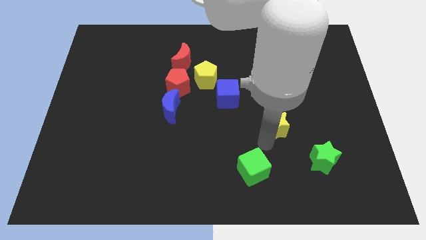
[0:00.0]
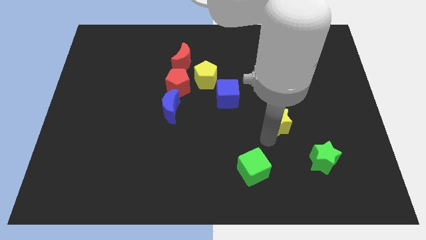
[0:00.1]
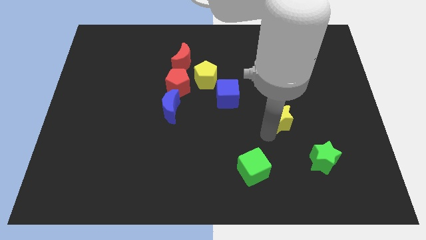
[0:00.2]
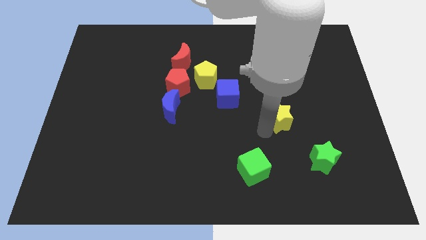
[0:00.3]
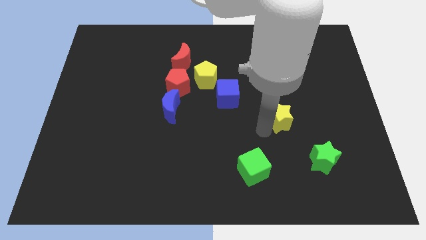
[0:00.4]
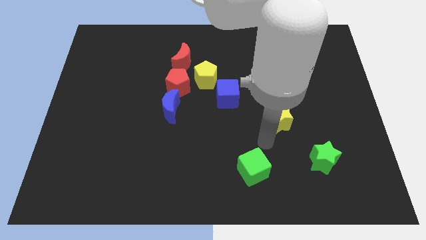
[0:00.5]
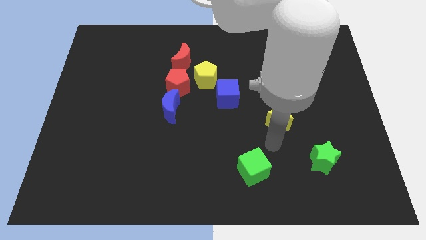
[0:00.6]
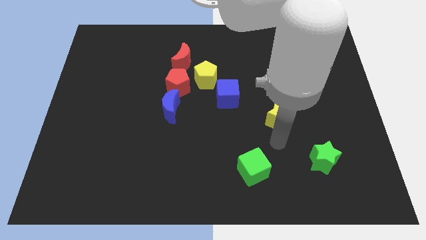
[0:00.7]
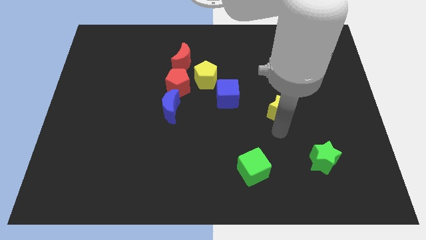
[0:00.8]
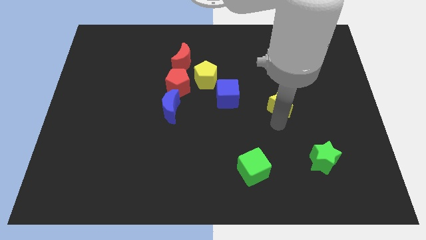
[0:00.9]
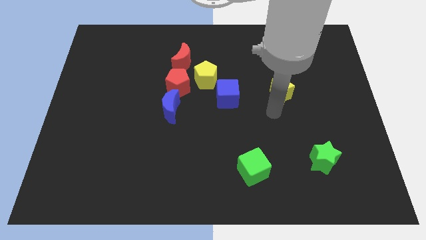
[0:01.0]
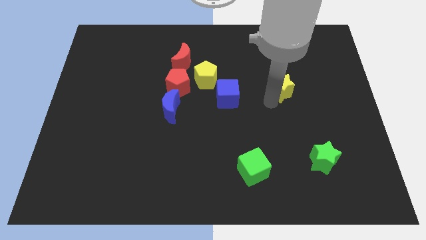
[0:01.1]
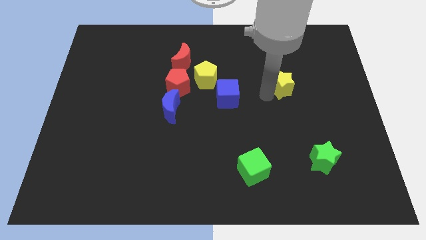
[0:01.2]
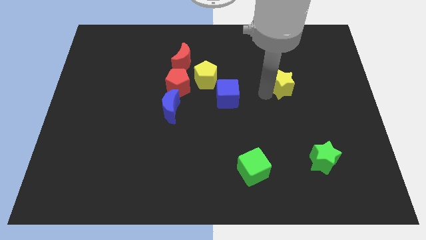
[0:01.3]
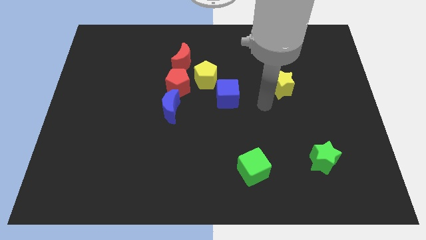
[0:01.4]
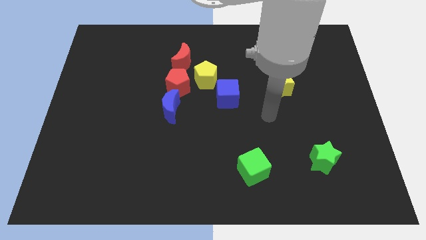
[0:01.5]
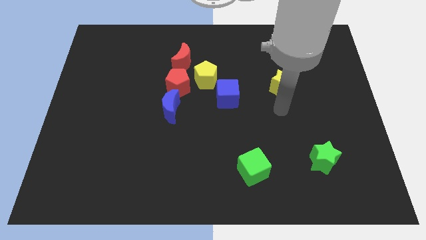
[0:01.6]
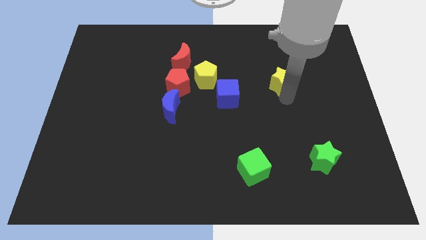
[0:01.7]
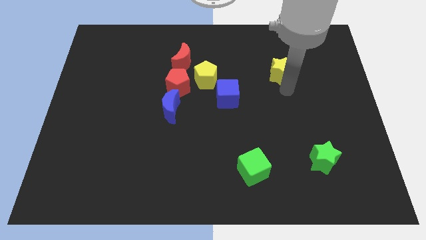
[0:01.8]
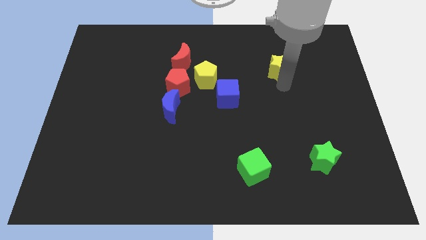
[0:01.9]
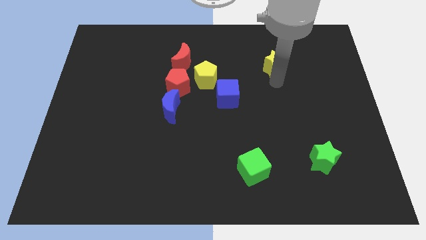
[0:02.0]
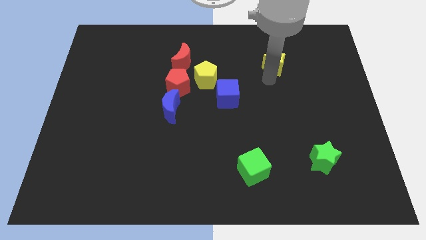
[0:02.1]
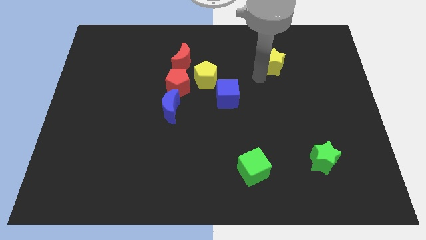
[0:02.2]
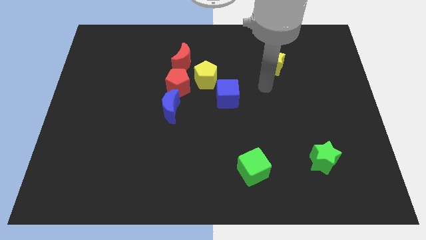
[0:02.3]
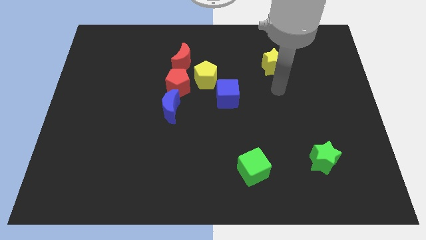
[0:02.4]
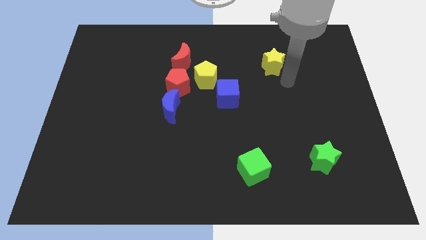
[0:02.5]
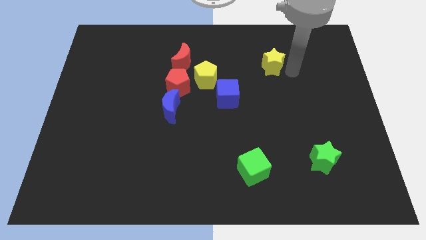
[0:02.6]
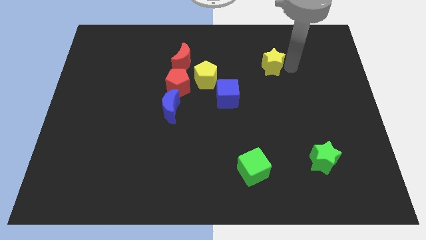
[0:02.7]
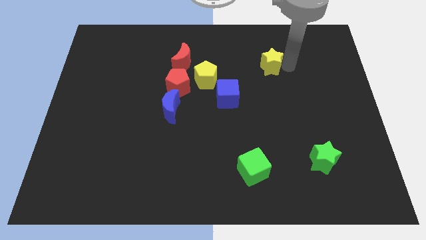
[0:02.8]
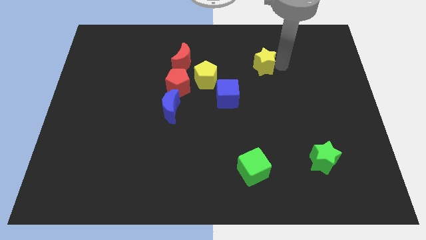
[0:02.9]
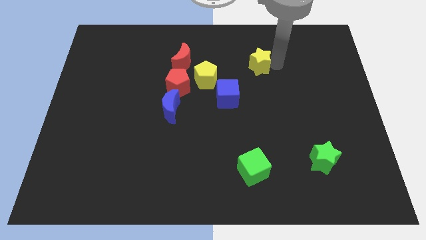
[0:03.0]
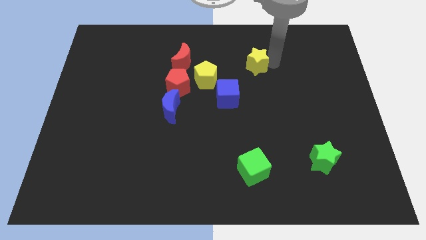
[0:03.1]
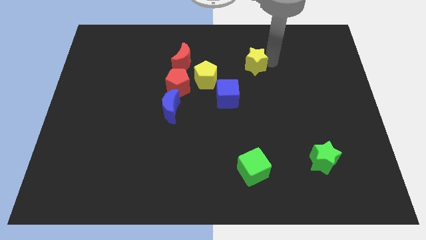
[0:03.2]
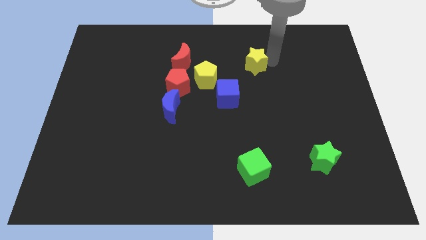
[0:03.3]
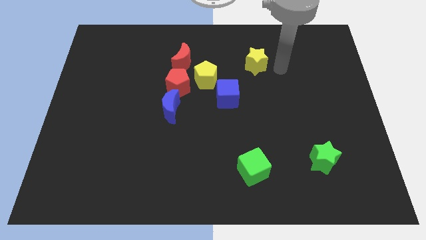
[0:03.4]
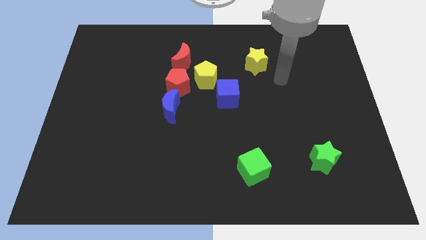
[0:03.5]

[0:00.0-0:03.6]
push the yellow star towards up

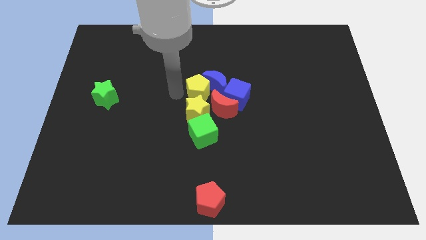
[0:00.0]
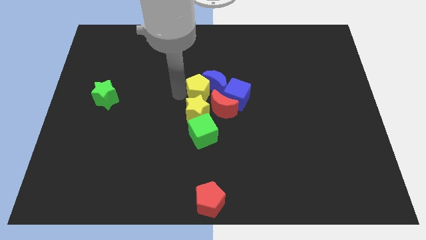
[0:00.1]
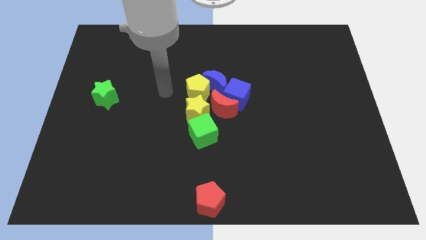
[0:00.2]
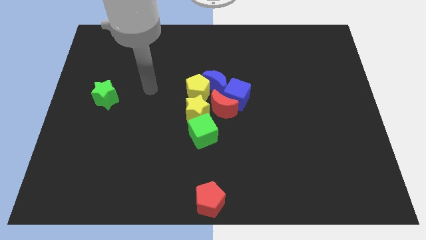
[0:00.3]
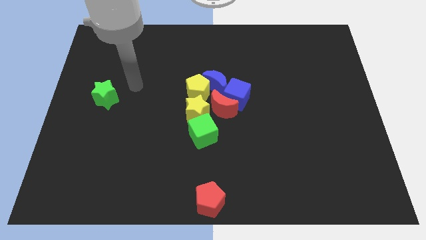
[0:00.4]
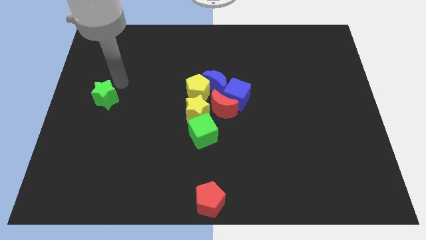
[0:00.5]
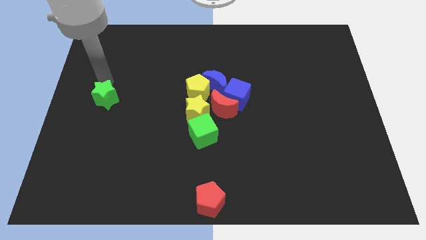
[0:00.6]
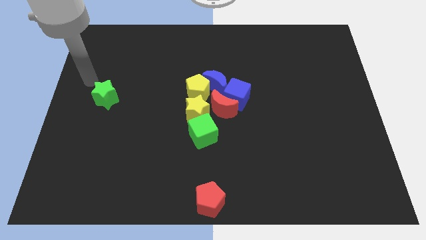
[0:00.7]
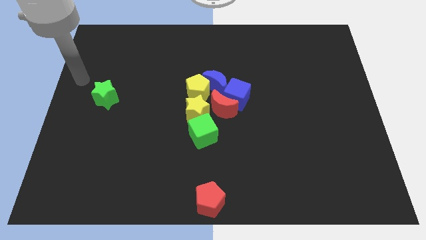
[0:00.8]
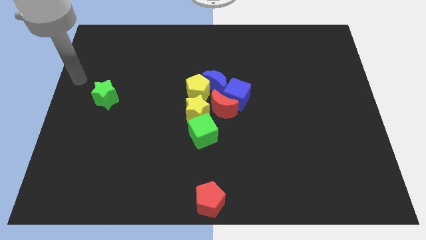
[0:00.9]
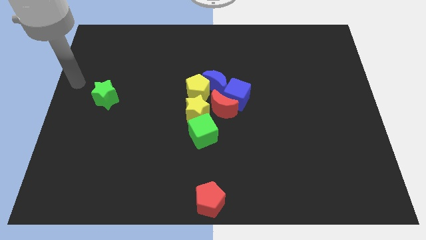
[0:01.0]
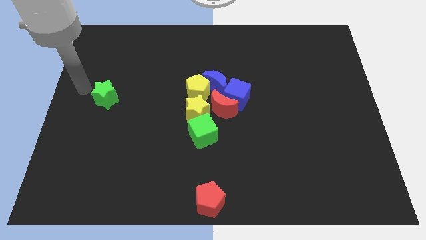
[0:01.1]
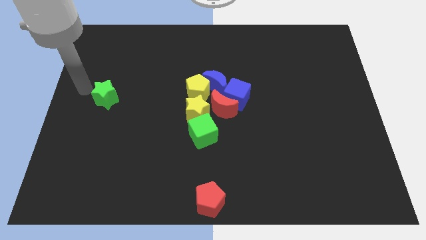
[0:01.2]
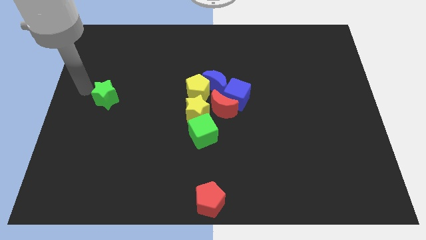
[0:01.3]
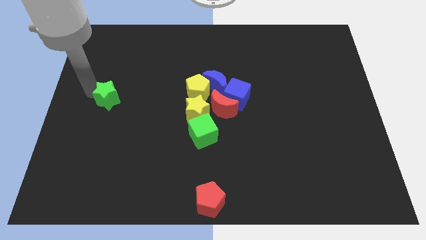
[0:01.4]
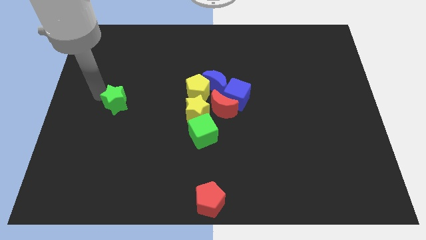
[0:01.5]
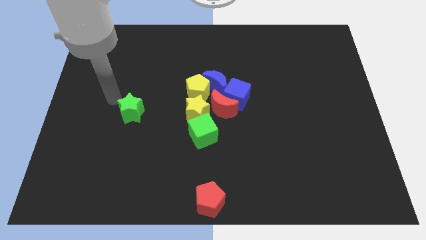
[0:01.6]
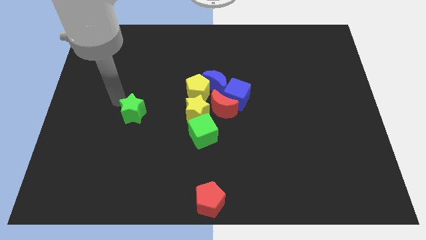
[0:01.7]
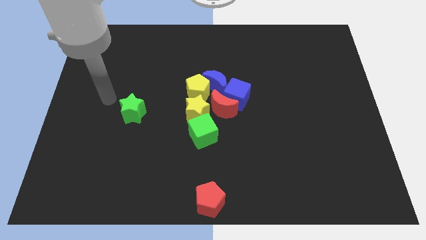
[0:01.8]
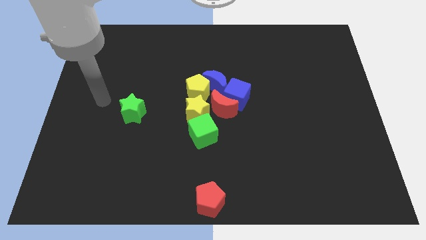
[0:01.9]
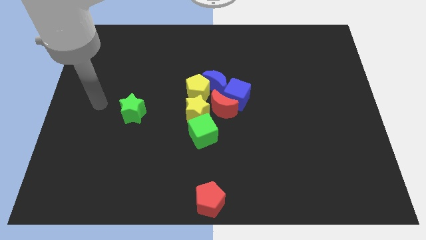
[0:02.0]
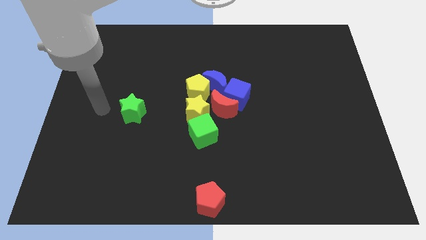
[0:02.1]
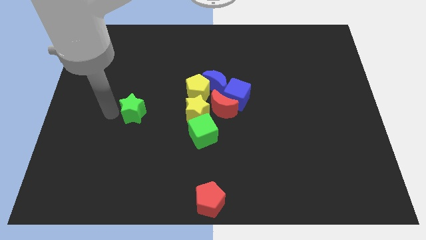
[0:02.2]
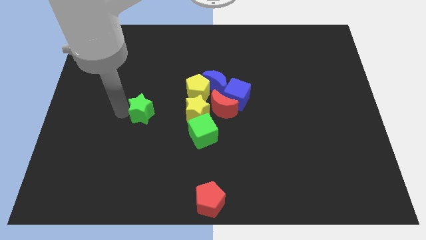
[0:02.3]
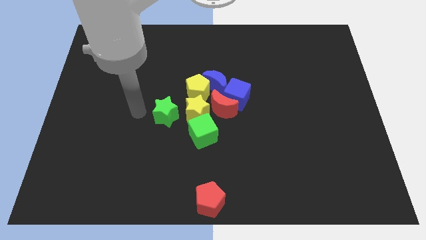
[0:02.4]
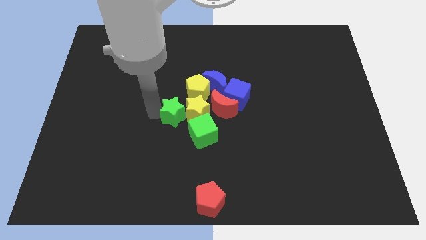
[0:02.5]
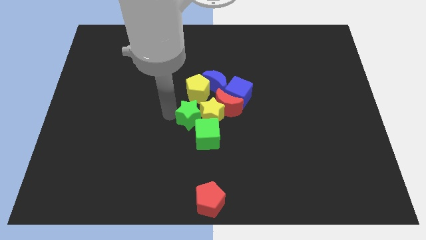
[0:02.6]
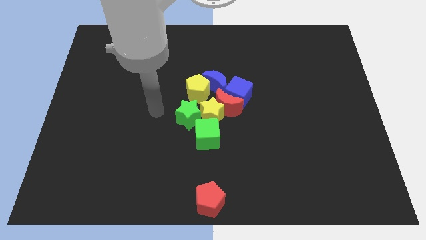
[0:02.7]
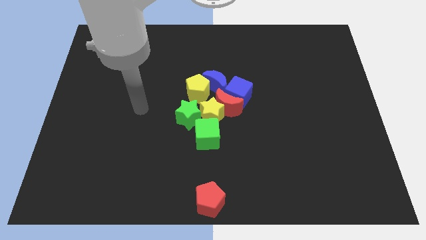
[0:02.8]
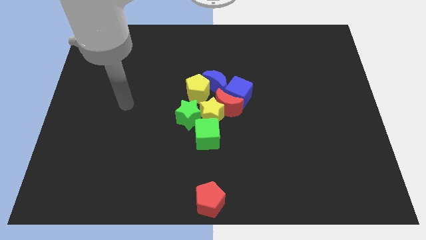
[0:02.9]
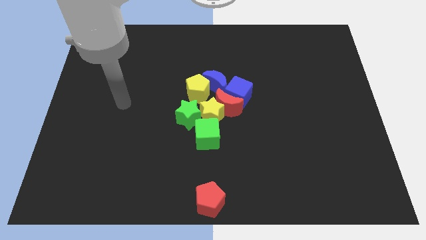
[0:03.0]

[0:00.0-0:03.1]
move the green star into the yellow star

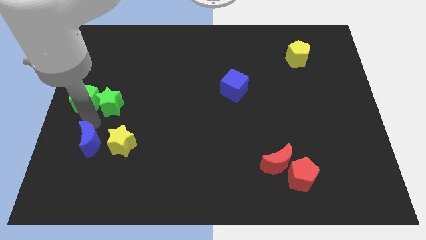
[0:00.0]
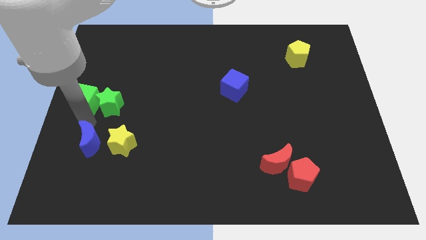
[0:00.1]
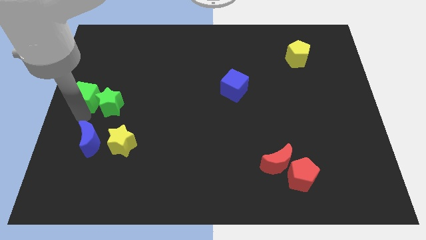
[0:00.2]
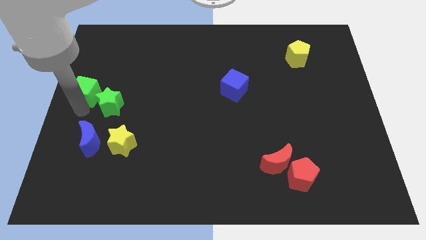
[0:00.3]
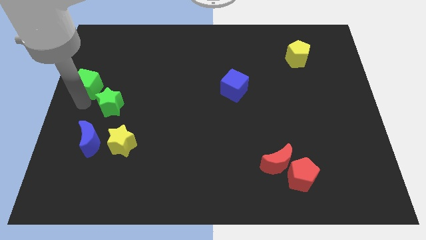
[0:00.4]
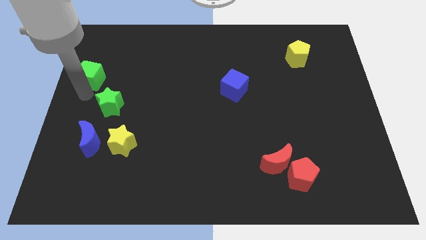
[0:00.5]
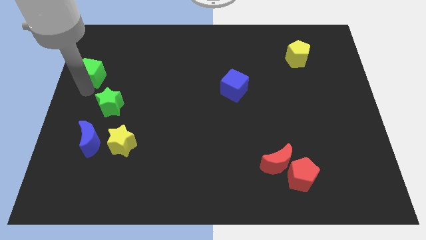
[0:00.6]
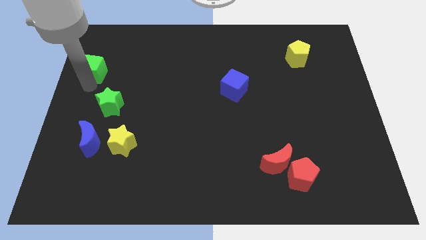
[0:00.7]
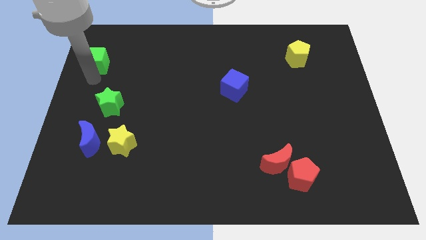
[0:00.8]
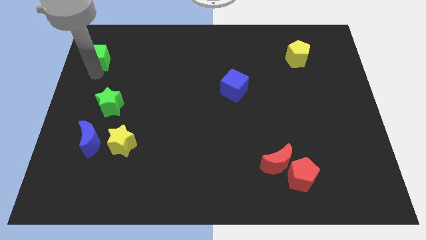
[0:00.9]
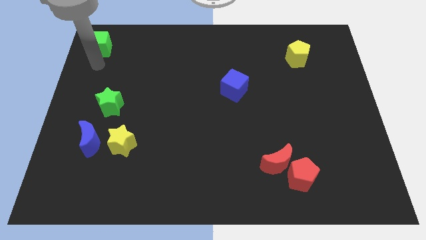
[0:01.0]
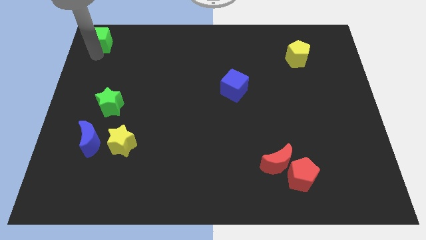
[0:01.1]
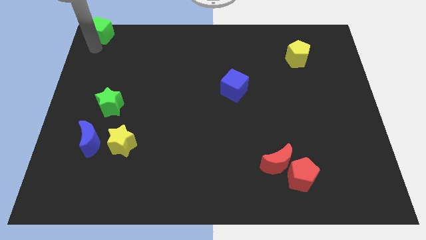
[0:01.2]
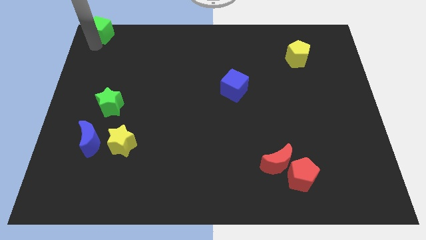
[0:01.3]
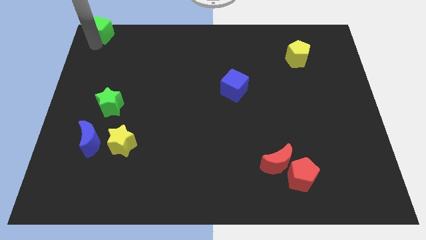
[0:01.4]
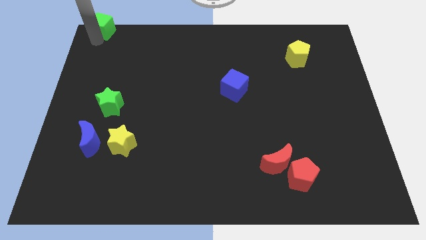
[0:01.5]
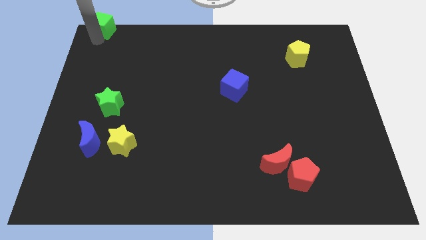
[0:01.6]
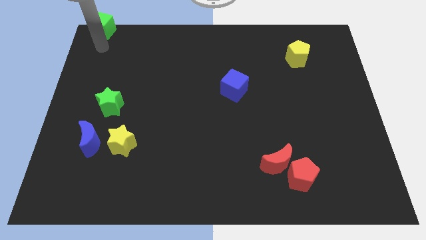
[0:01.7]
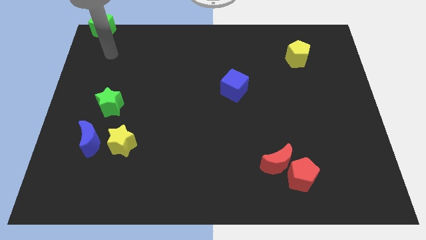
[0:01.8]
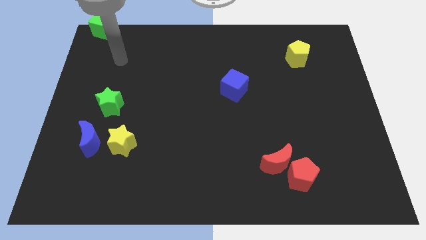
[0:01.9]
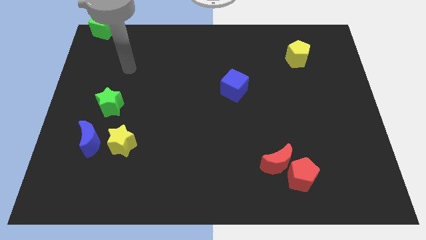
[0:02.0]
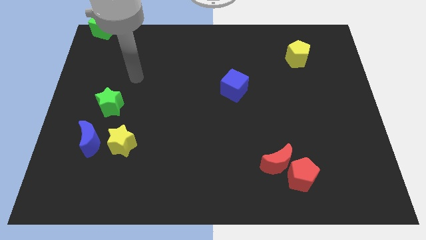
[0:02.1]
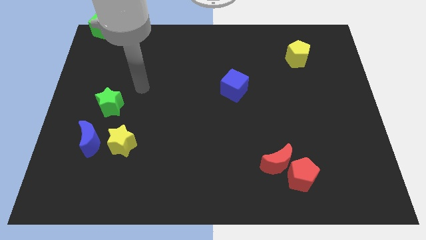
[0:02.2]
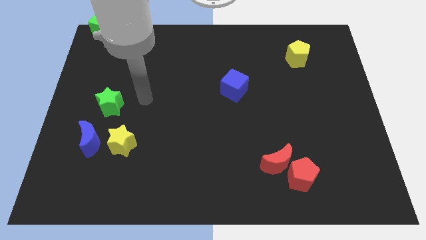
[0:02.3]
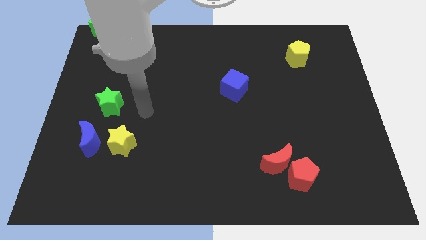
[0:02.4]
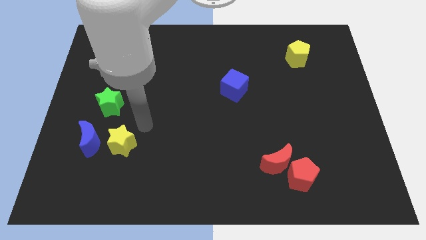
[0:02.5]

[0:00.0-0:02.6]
move the green cube to the top left corner of the board
